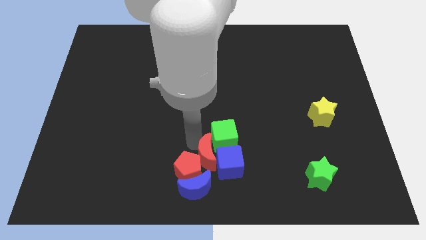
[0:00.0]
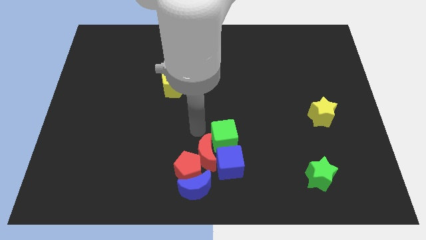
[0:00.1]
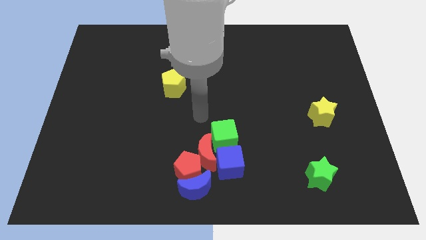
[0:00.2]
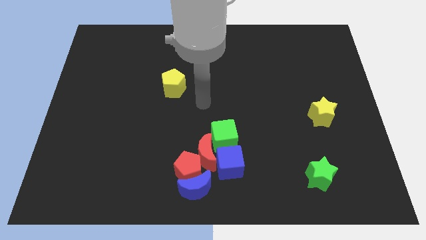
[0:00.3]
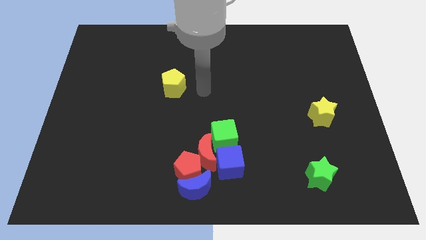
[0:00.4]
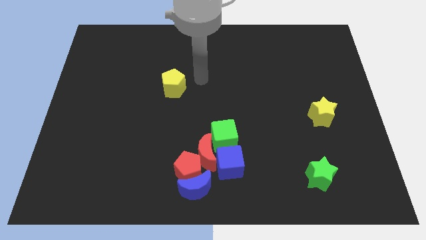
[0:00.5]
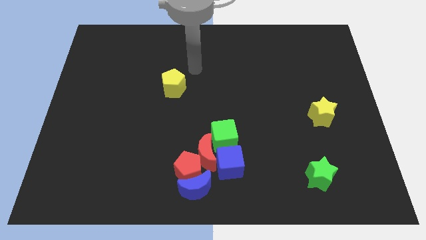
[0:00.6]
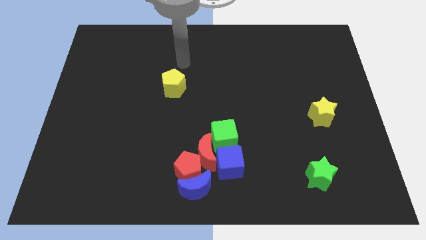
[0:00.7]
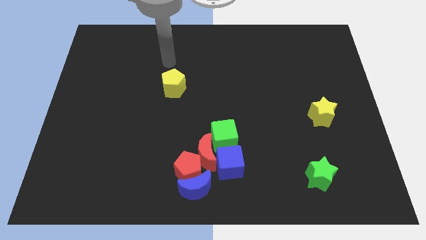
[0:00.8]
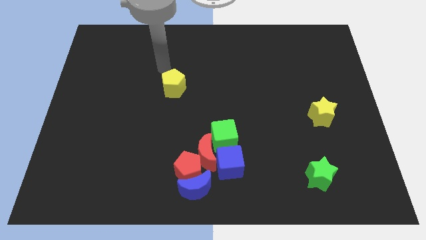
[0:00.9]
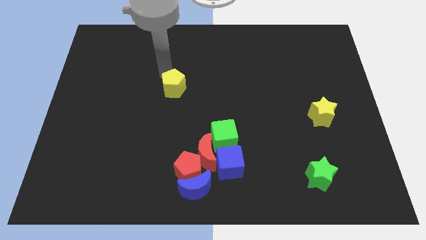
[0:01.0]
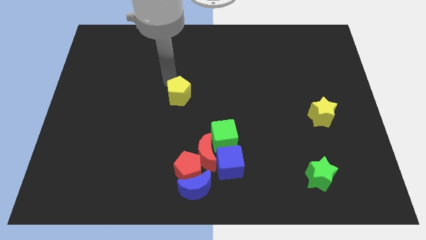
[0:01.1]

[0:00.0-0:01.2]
move your arm away from red crescent

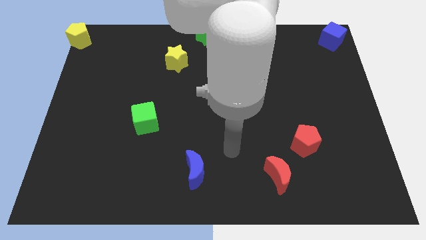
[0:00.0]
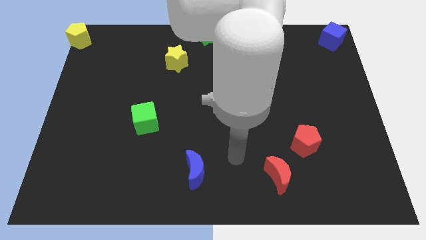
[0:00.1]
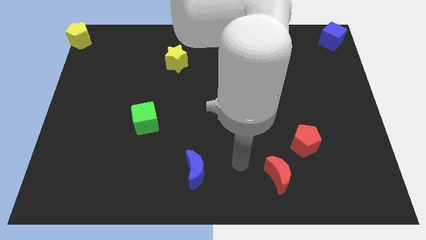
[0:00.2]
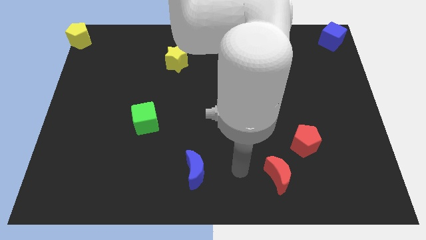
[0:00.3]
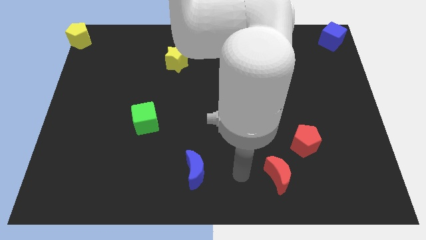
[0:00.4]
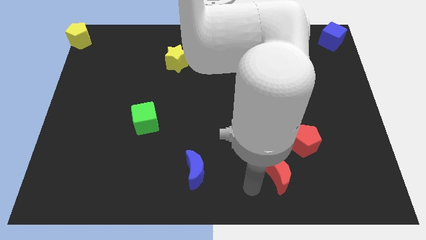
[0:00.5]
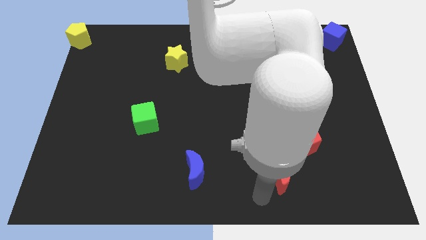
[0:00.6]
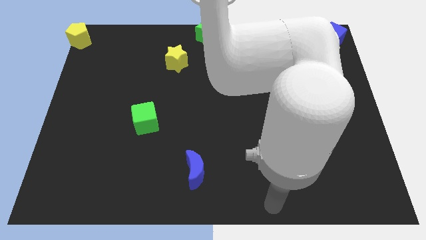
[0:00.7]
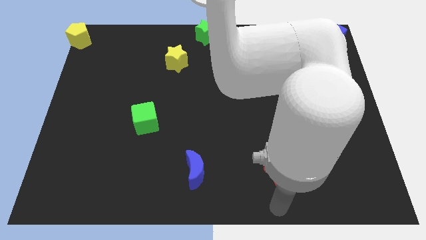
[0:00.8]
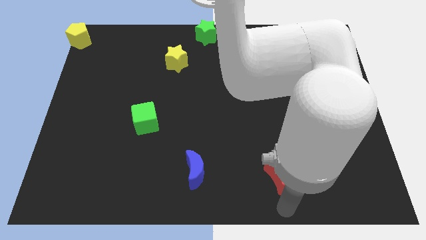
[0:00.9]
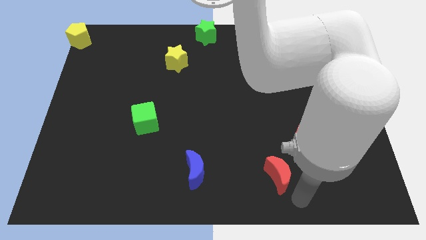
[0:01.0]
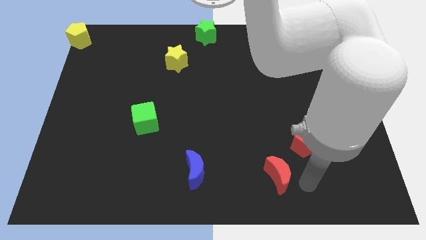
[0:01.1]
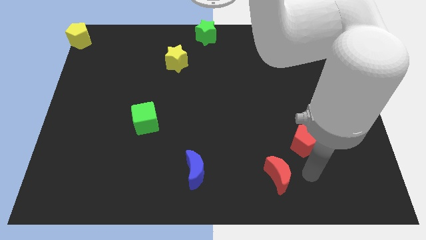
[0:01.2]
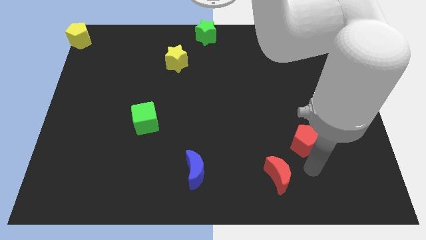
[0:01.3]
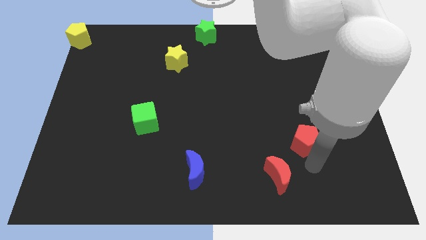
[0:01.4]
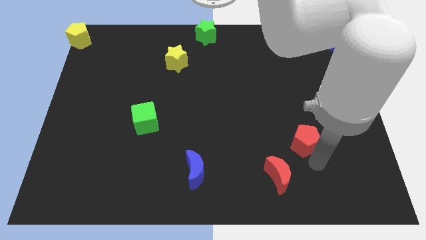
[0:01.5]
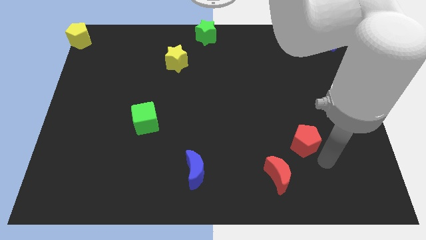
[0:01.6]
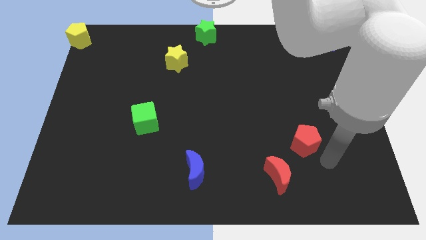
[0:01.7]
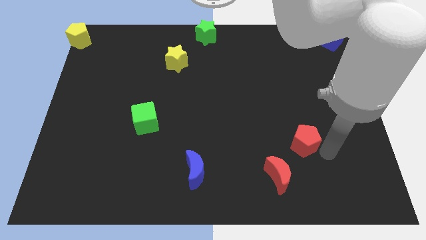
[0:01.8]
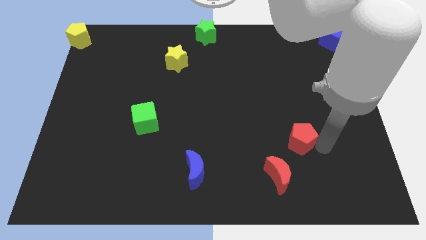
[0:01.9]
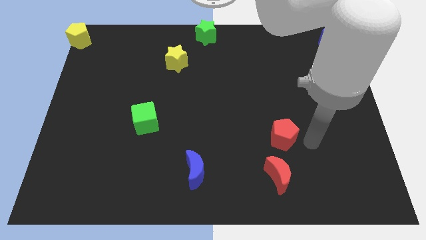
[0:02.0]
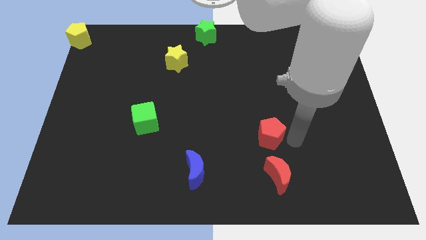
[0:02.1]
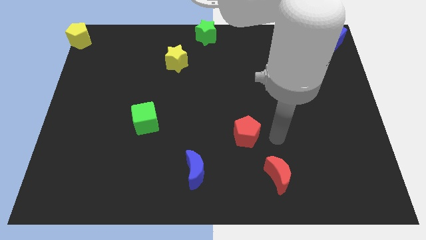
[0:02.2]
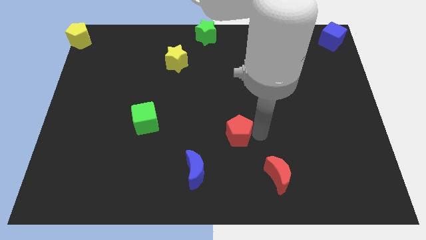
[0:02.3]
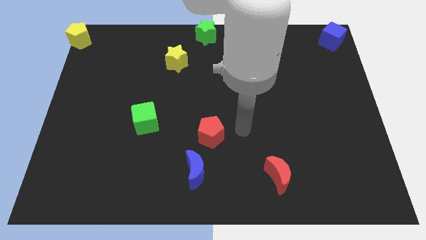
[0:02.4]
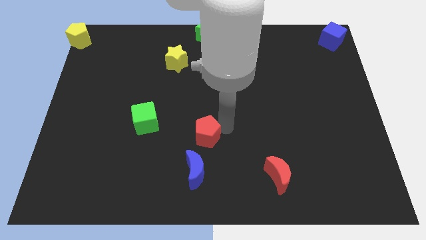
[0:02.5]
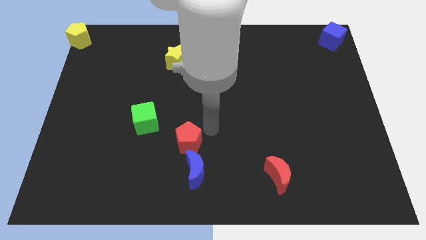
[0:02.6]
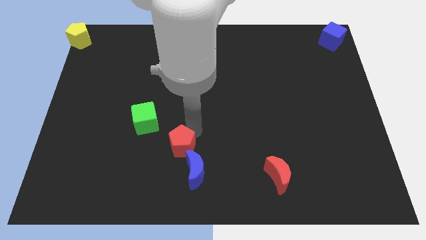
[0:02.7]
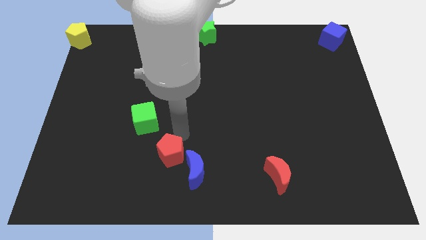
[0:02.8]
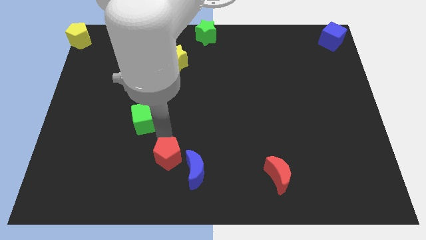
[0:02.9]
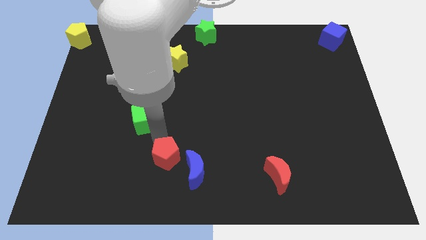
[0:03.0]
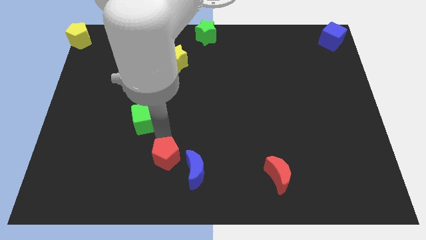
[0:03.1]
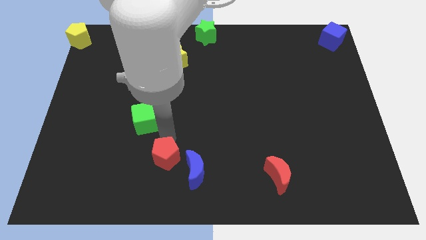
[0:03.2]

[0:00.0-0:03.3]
move the red pentagon between green cube and blue crescent

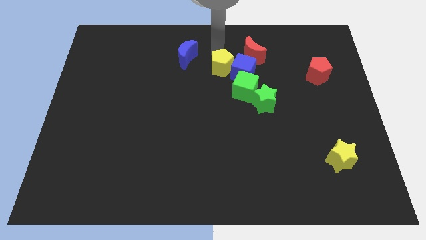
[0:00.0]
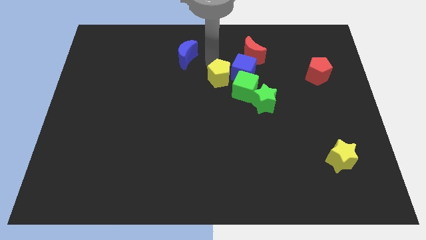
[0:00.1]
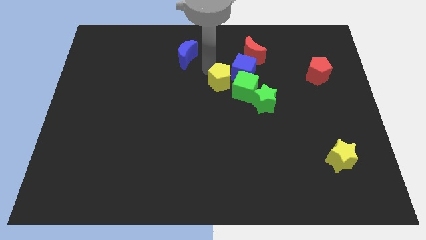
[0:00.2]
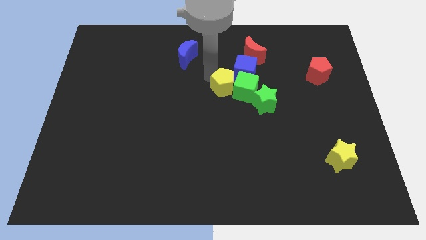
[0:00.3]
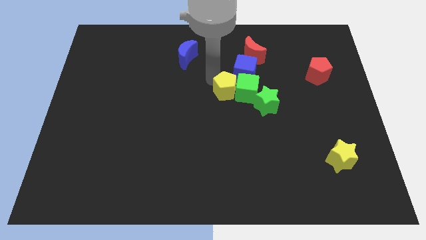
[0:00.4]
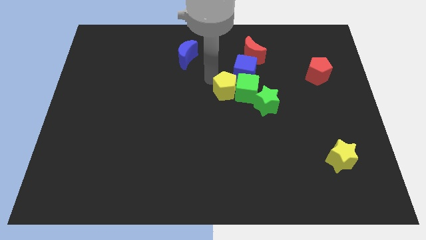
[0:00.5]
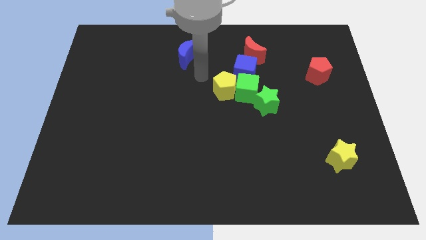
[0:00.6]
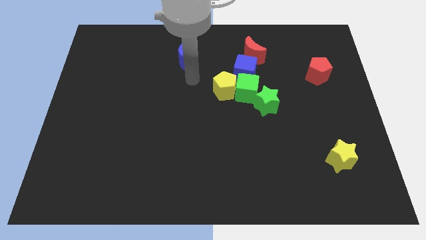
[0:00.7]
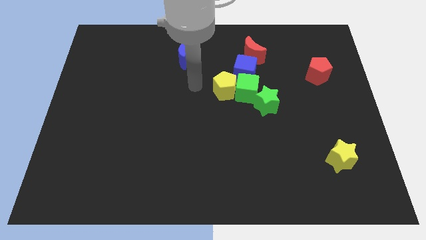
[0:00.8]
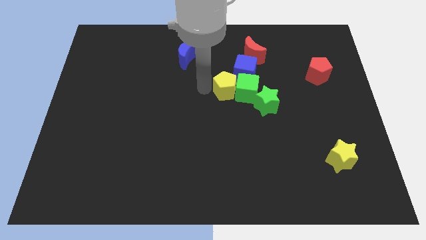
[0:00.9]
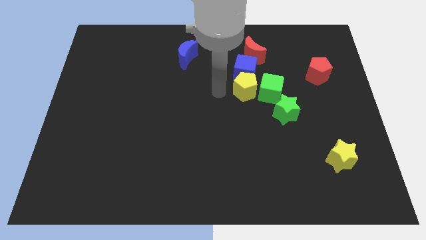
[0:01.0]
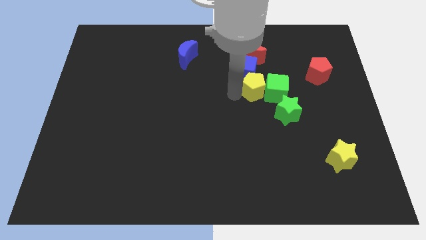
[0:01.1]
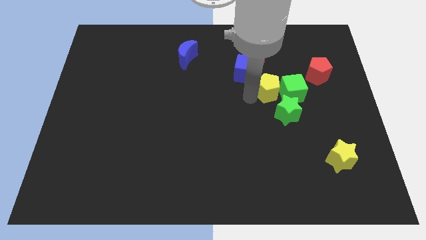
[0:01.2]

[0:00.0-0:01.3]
push the yellow pentagon and green cube to the top side of the green star

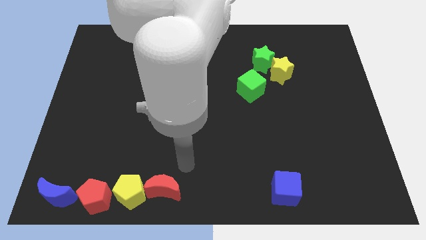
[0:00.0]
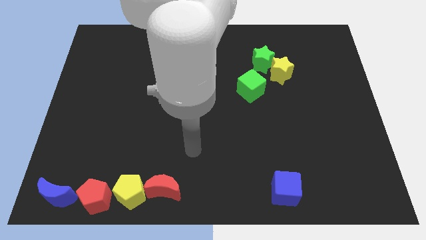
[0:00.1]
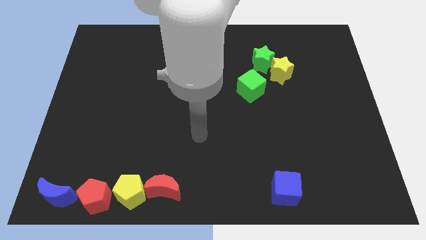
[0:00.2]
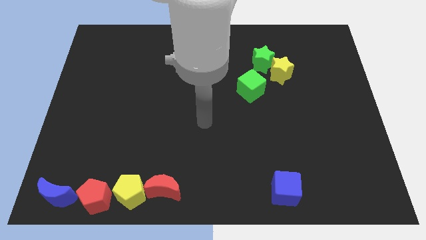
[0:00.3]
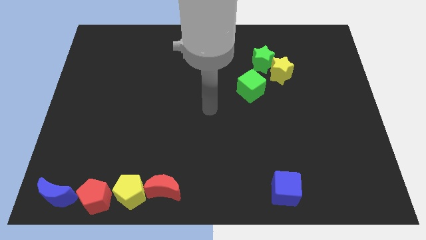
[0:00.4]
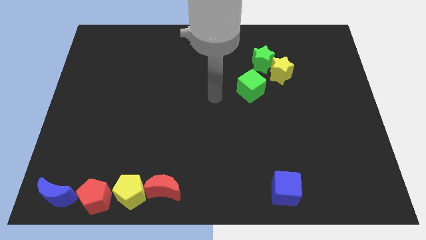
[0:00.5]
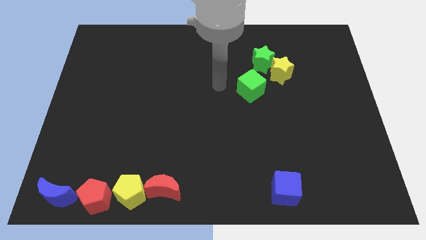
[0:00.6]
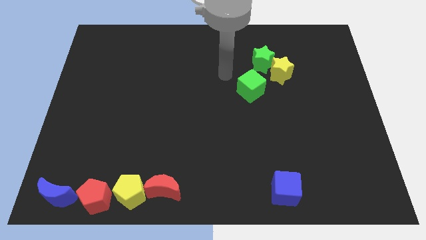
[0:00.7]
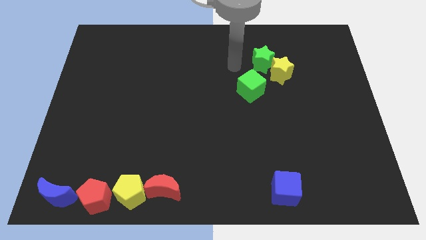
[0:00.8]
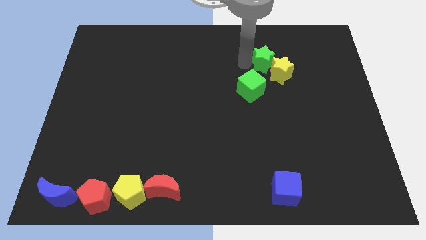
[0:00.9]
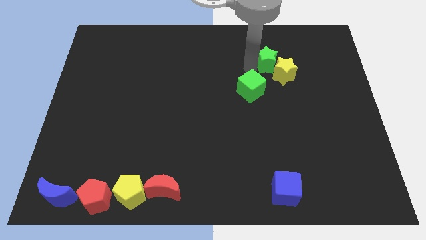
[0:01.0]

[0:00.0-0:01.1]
move your arm to the left of green star

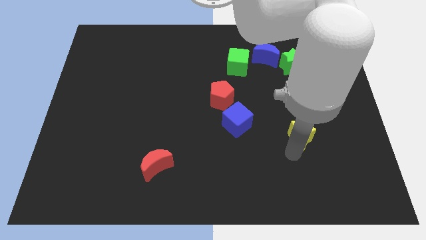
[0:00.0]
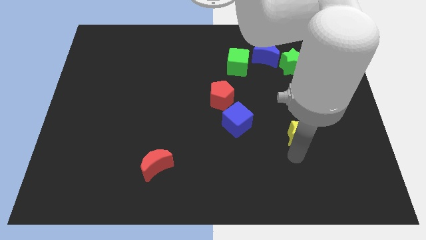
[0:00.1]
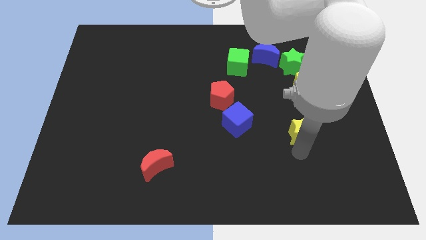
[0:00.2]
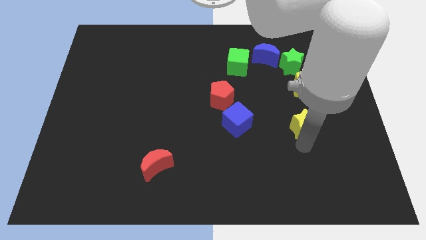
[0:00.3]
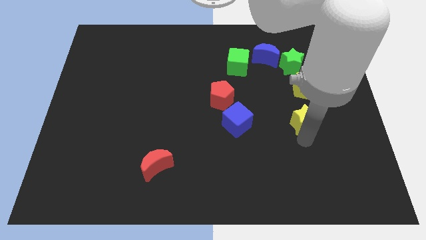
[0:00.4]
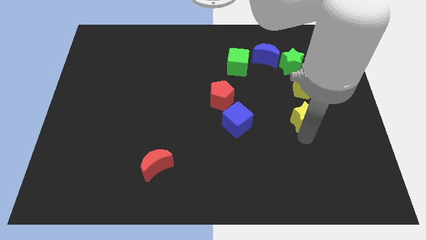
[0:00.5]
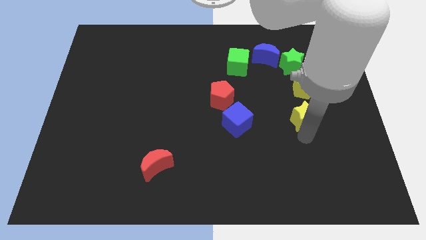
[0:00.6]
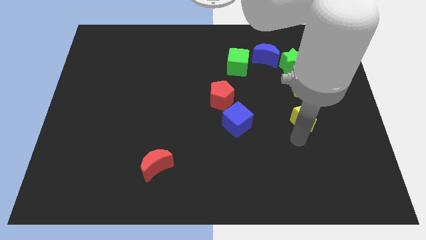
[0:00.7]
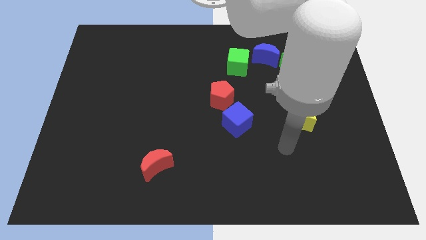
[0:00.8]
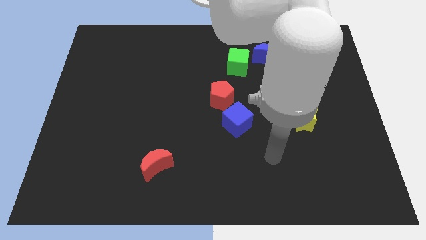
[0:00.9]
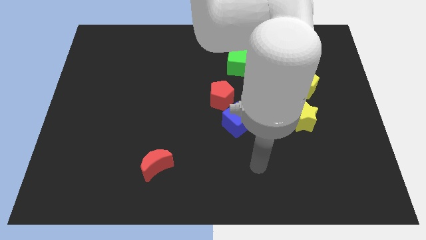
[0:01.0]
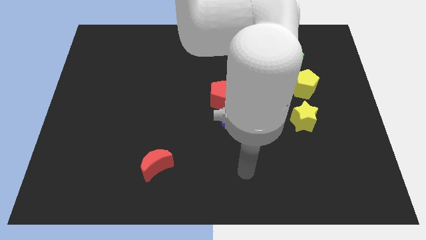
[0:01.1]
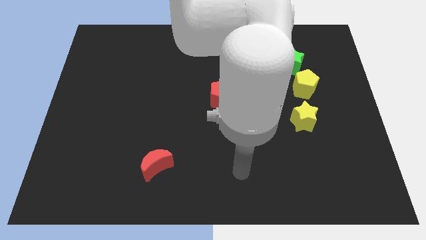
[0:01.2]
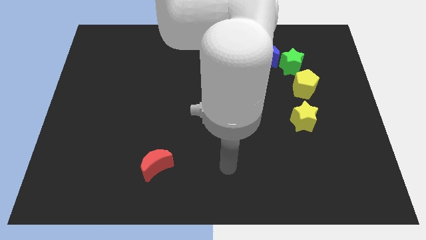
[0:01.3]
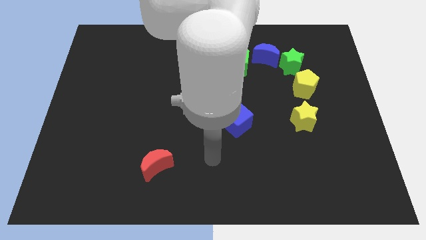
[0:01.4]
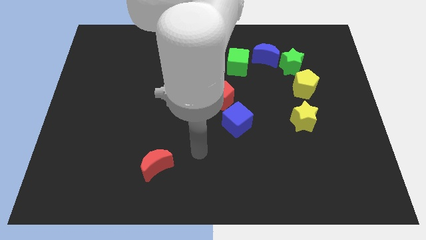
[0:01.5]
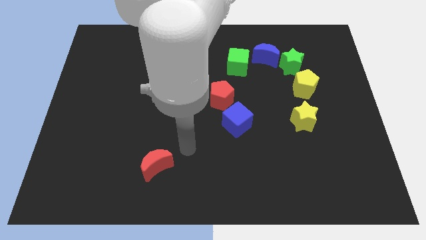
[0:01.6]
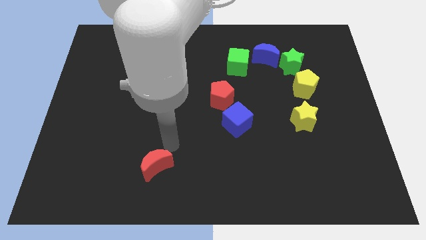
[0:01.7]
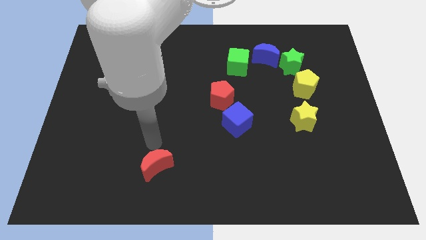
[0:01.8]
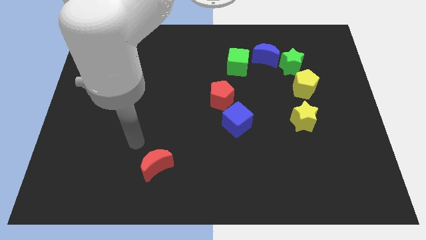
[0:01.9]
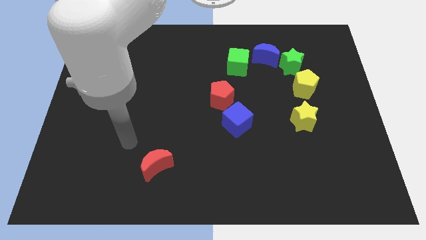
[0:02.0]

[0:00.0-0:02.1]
slide the yellow star vertically at the bottom of the yellow pentagon
